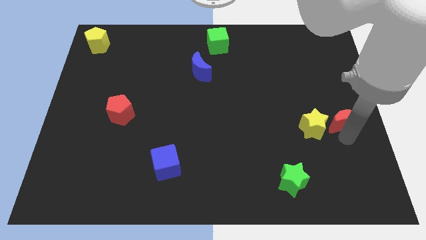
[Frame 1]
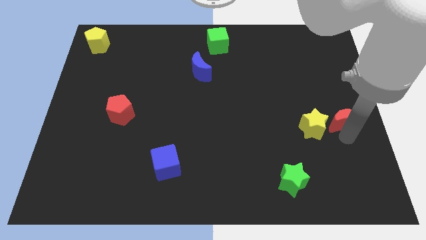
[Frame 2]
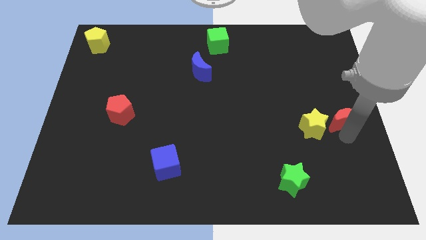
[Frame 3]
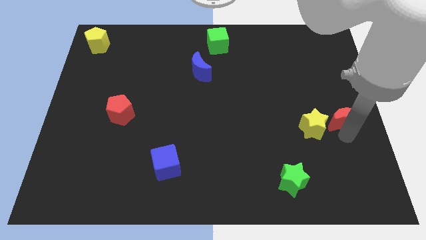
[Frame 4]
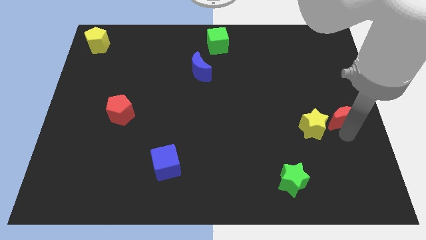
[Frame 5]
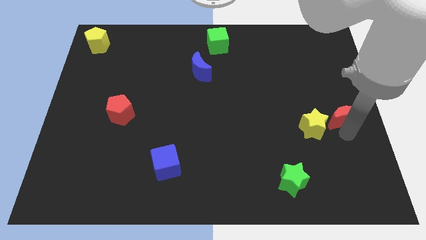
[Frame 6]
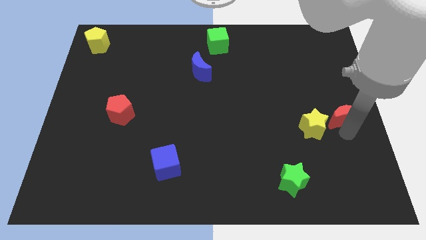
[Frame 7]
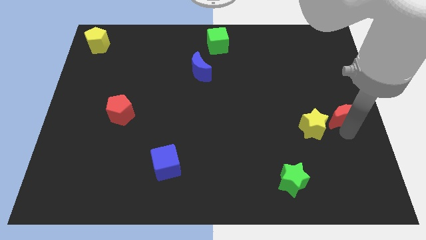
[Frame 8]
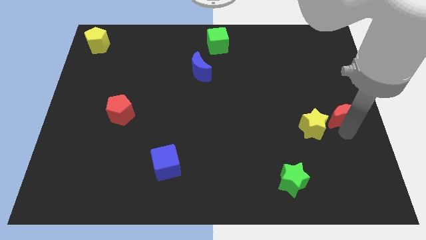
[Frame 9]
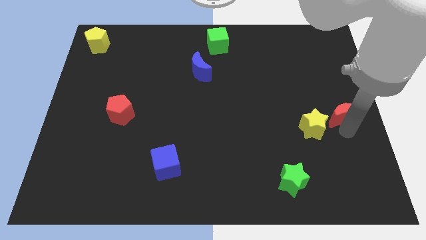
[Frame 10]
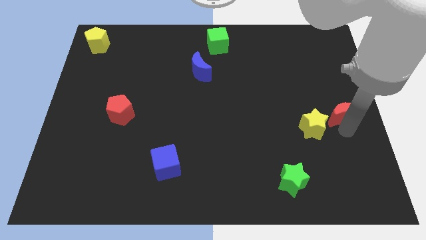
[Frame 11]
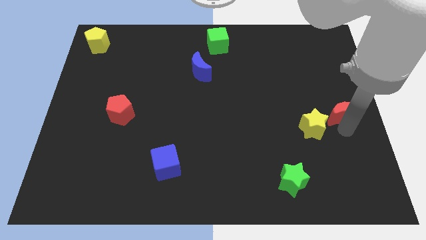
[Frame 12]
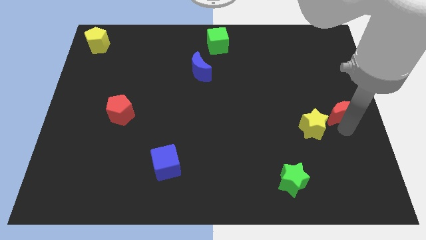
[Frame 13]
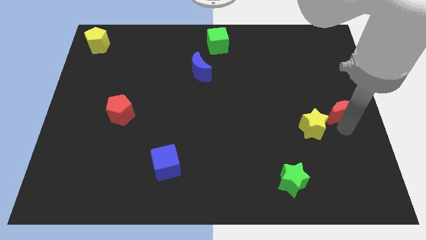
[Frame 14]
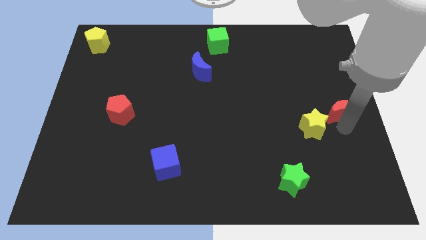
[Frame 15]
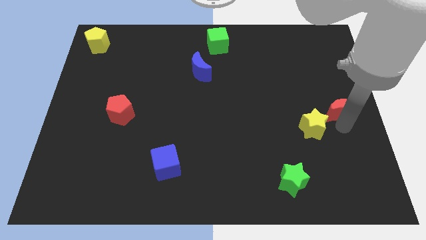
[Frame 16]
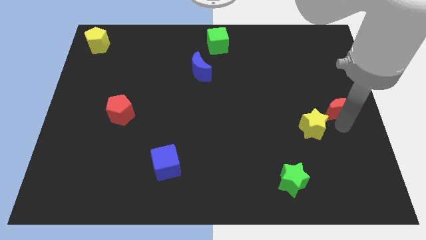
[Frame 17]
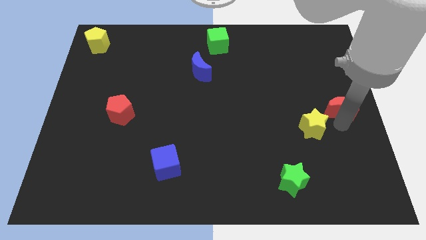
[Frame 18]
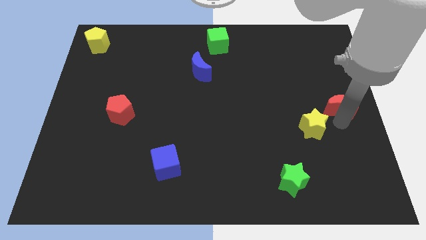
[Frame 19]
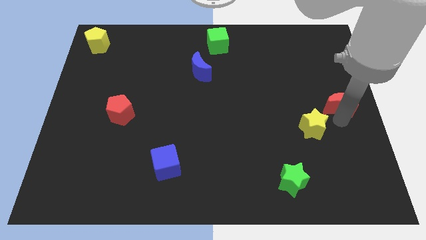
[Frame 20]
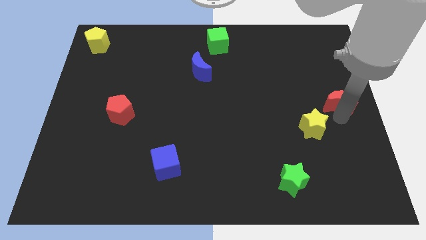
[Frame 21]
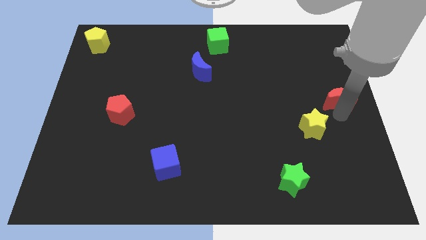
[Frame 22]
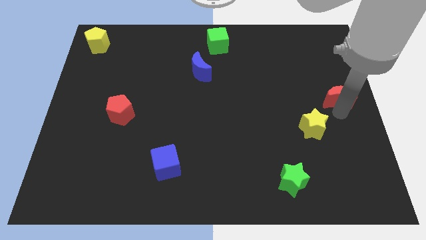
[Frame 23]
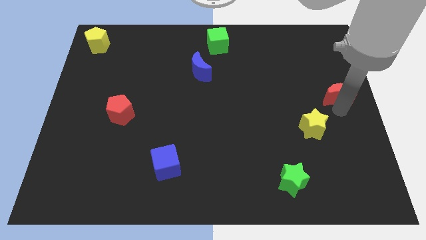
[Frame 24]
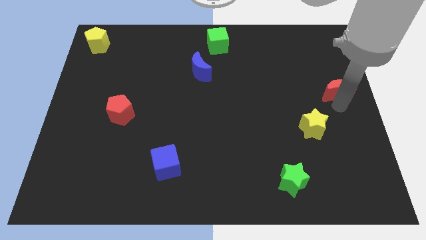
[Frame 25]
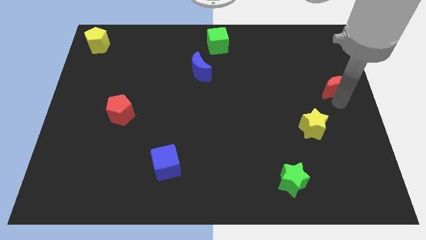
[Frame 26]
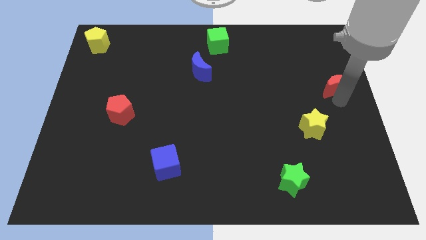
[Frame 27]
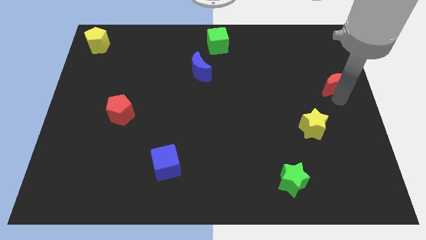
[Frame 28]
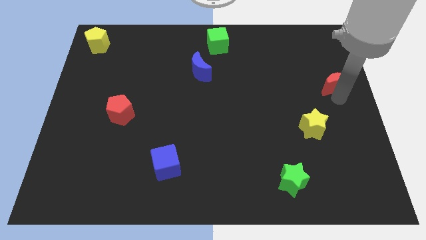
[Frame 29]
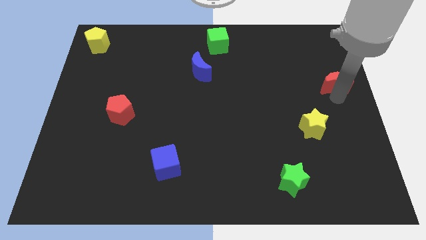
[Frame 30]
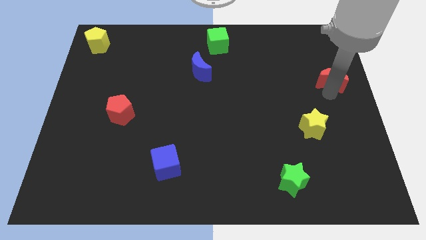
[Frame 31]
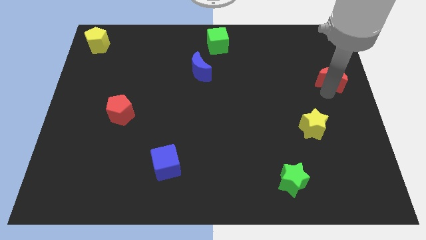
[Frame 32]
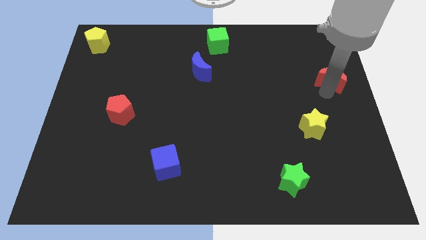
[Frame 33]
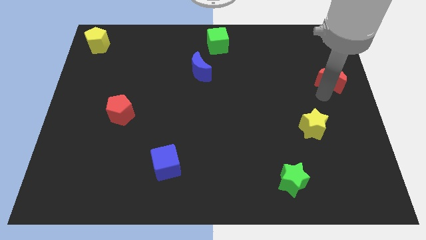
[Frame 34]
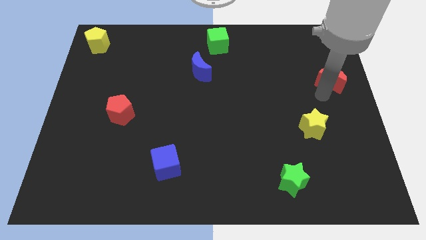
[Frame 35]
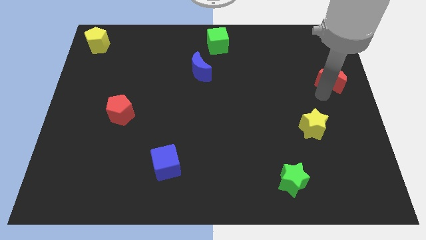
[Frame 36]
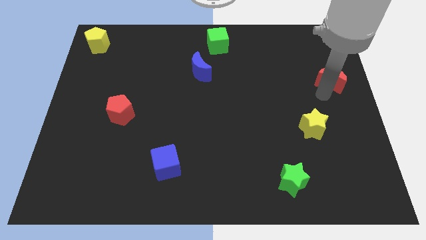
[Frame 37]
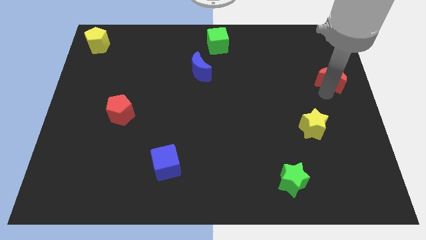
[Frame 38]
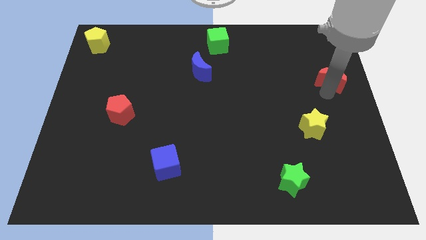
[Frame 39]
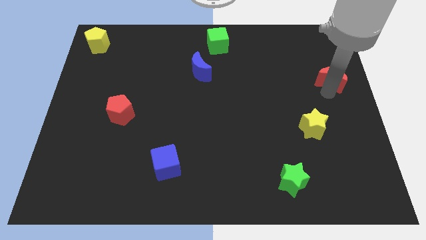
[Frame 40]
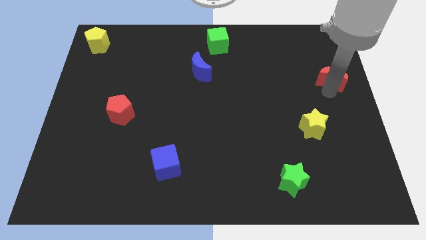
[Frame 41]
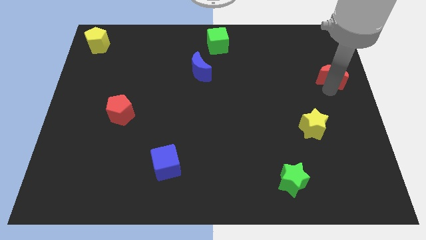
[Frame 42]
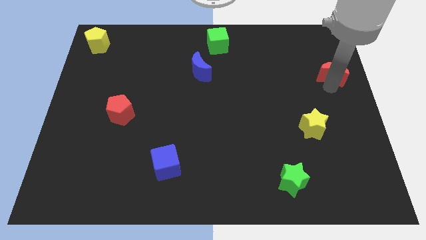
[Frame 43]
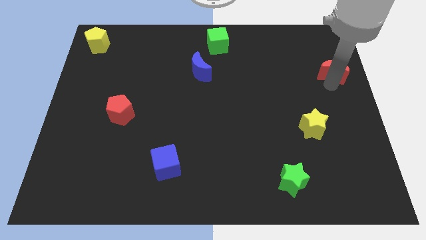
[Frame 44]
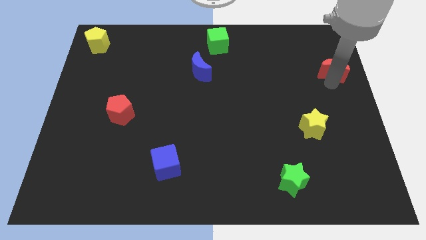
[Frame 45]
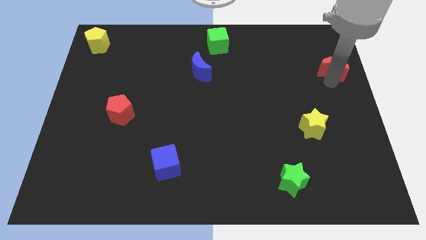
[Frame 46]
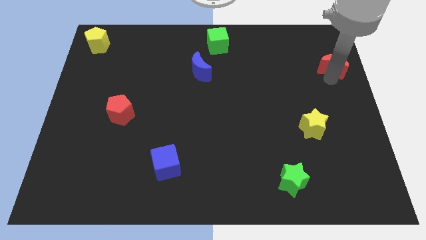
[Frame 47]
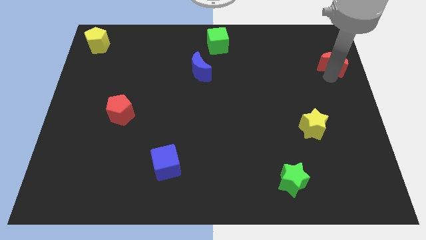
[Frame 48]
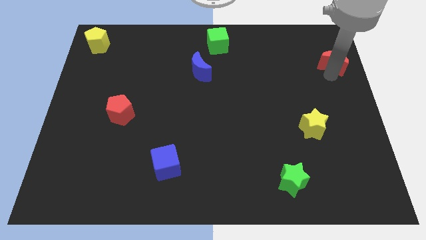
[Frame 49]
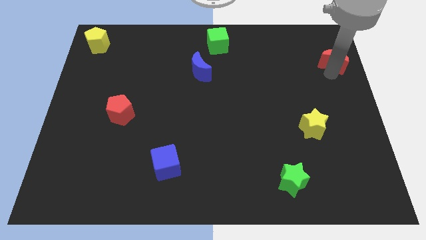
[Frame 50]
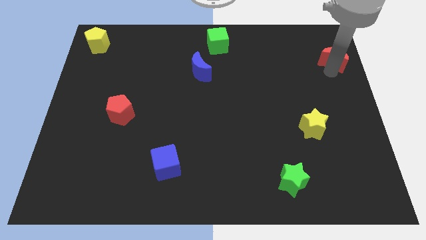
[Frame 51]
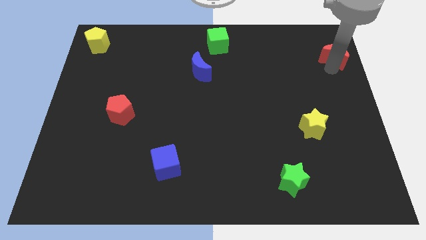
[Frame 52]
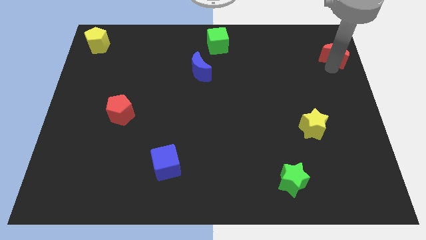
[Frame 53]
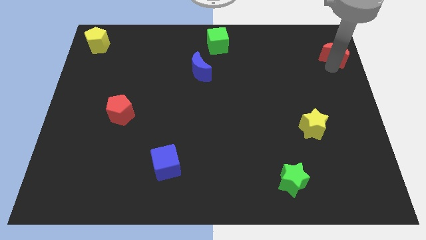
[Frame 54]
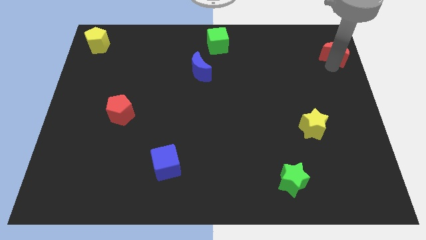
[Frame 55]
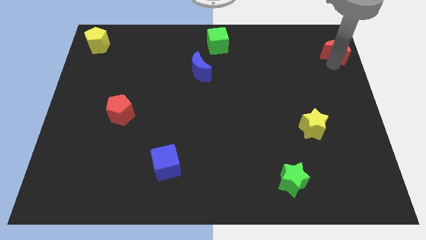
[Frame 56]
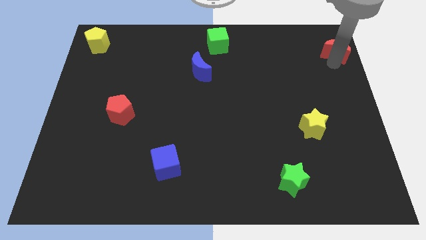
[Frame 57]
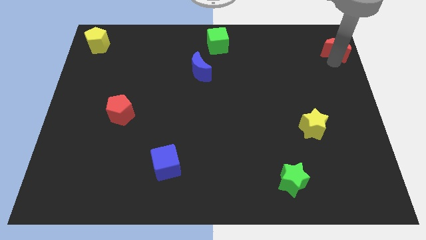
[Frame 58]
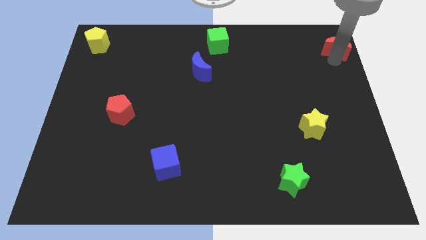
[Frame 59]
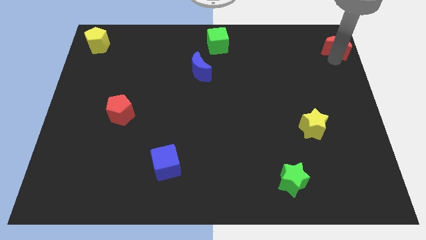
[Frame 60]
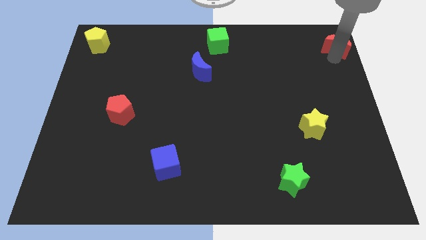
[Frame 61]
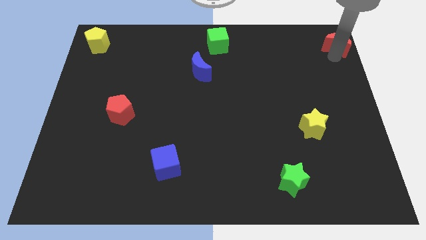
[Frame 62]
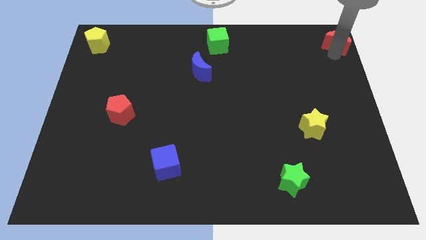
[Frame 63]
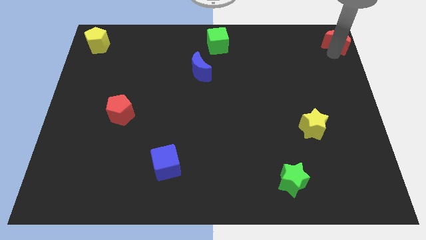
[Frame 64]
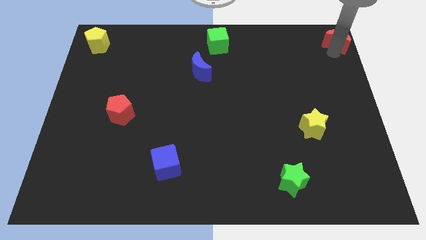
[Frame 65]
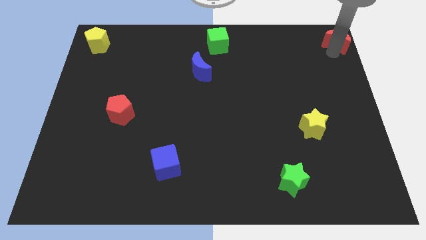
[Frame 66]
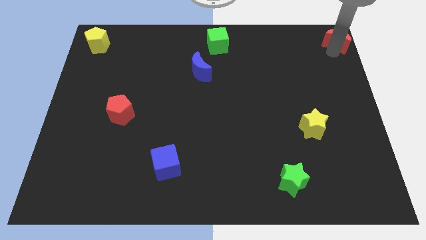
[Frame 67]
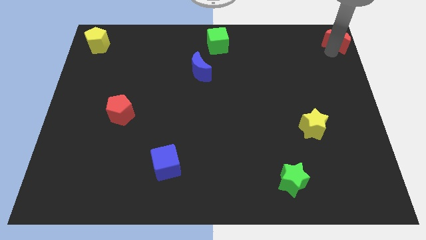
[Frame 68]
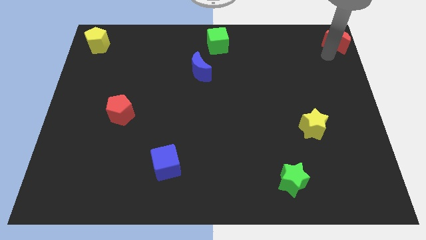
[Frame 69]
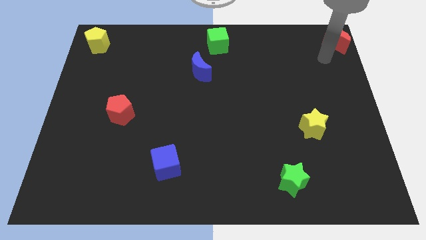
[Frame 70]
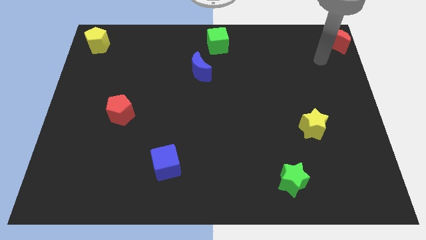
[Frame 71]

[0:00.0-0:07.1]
push the red moon to the top right corner

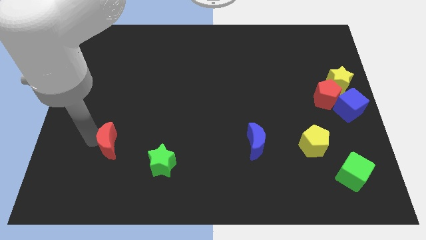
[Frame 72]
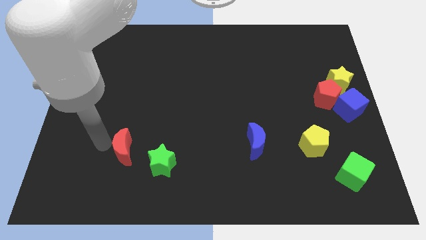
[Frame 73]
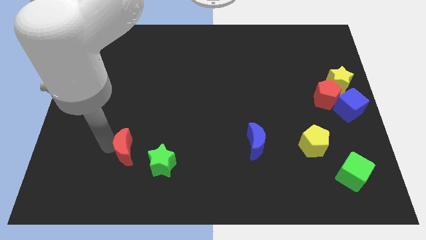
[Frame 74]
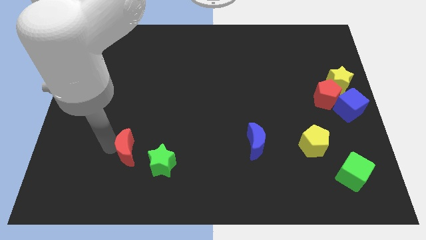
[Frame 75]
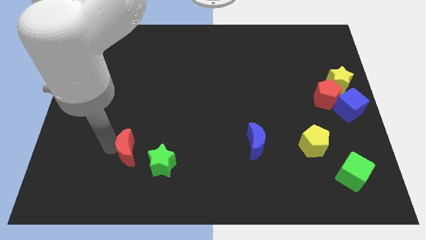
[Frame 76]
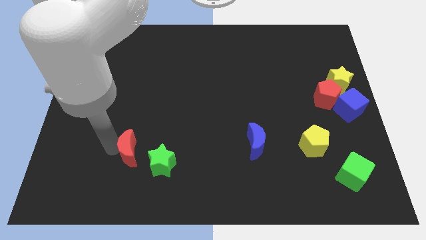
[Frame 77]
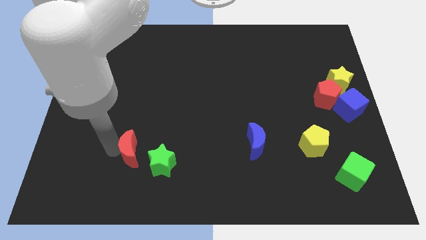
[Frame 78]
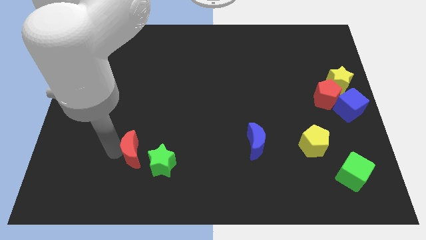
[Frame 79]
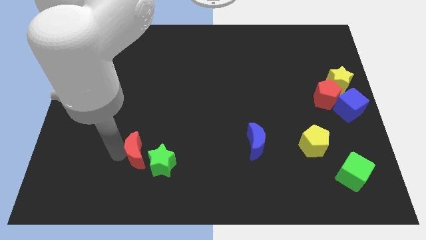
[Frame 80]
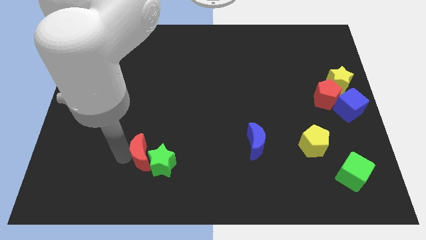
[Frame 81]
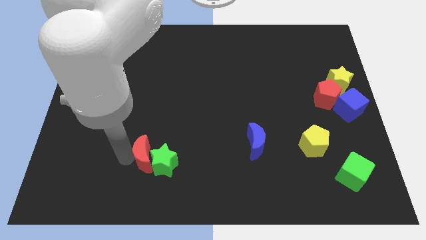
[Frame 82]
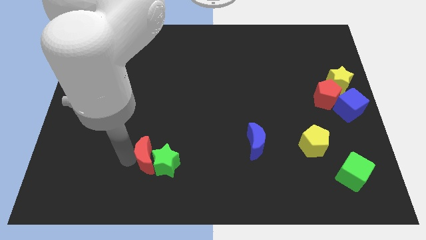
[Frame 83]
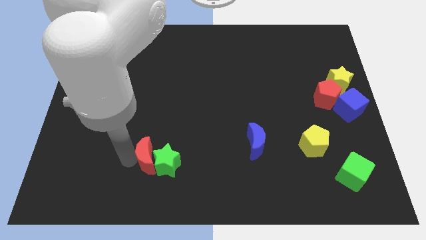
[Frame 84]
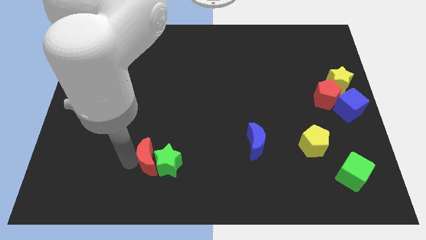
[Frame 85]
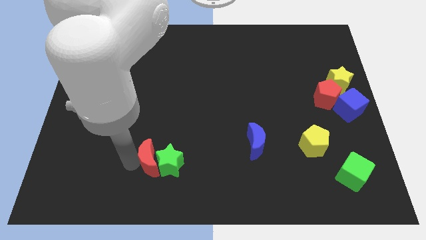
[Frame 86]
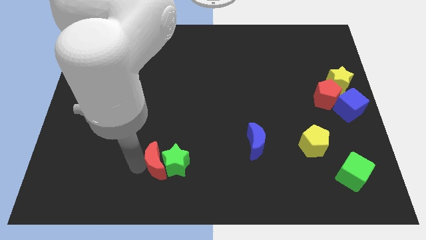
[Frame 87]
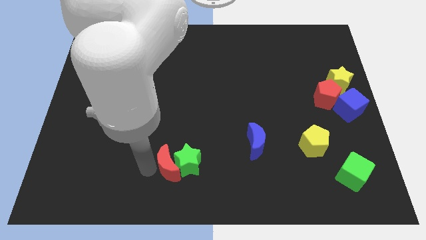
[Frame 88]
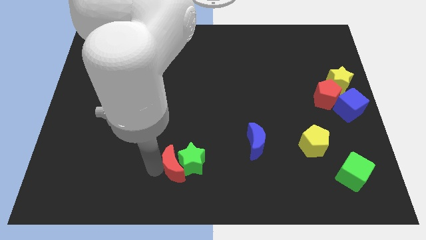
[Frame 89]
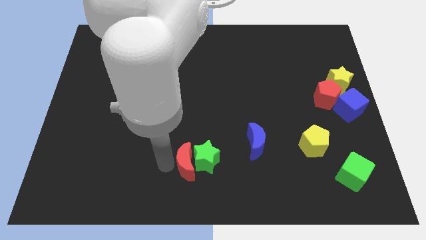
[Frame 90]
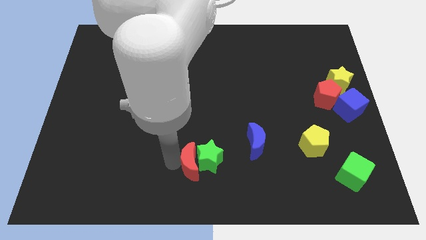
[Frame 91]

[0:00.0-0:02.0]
push the green star along with the red crescent towards the bottom center of the board
